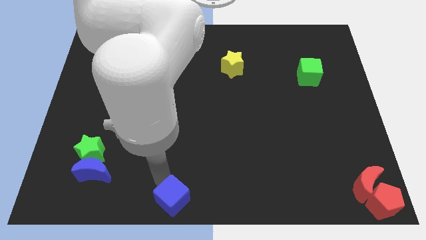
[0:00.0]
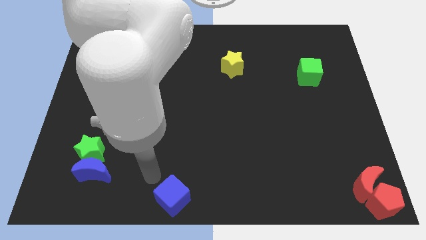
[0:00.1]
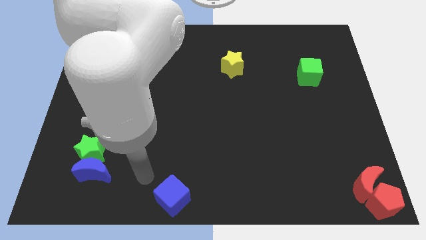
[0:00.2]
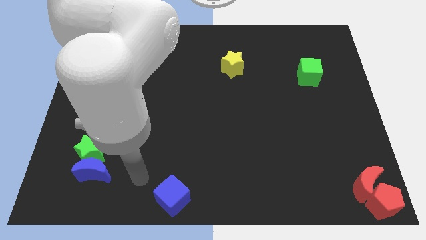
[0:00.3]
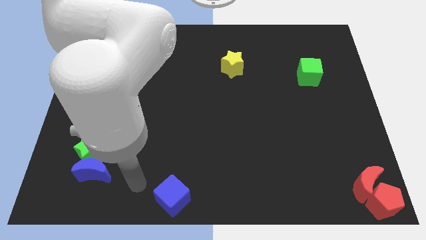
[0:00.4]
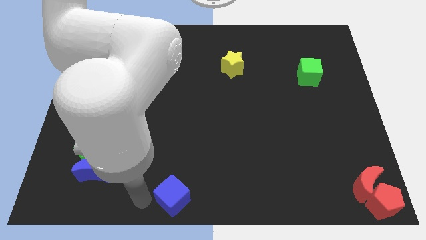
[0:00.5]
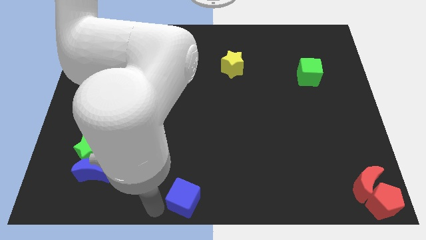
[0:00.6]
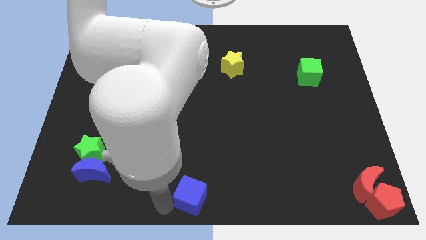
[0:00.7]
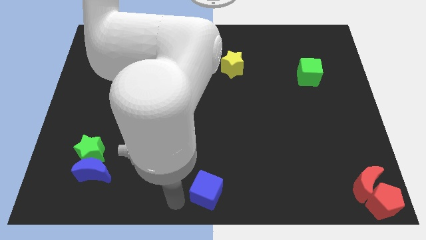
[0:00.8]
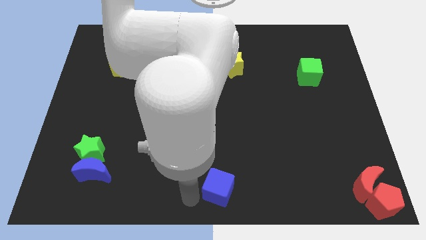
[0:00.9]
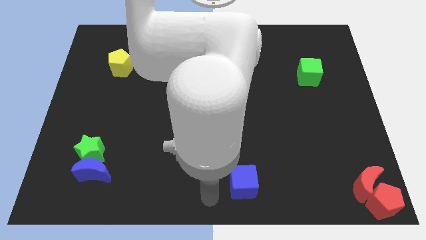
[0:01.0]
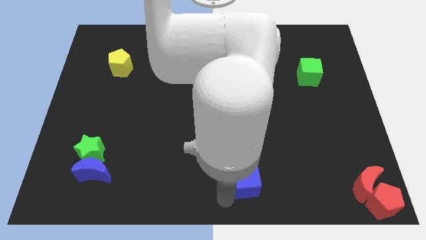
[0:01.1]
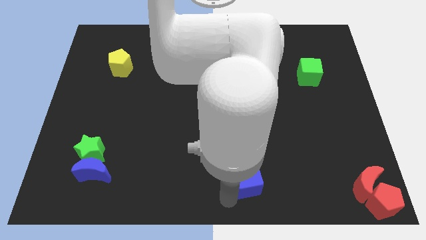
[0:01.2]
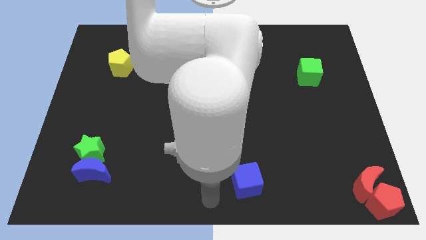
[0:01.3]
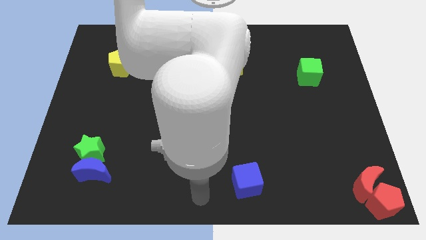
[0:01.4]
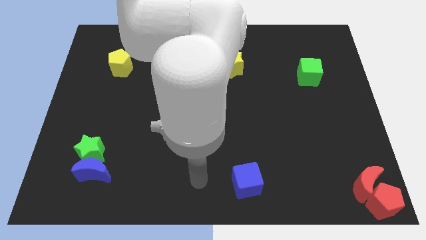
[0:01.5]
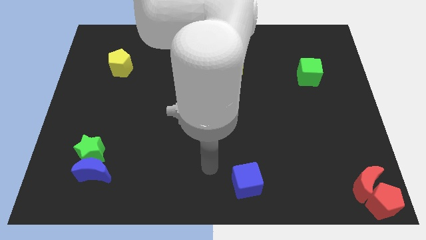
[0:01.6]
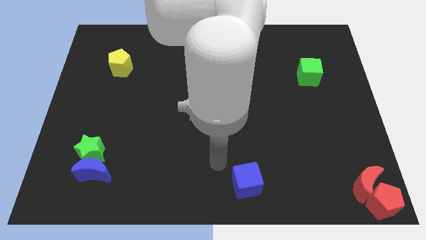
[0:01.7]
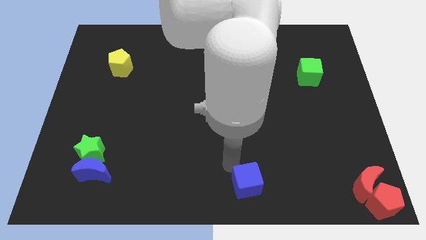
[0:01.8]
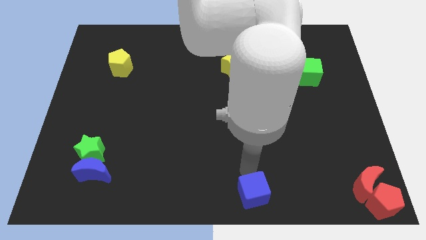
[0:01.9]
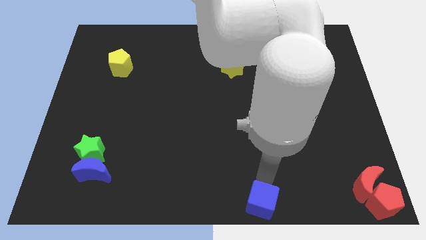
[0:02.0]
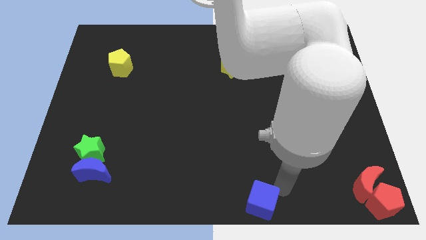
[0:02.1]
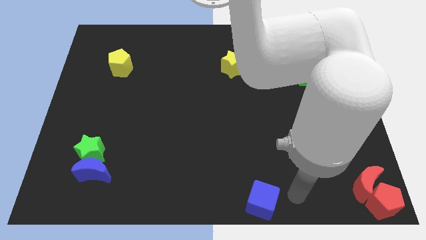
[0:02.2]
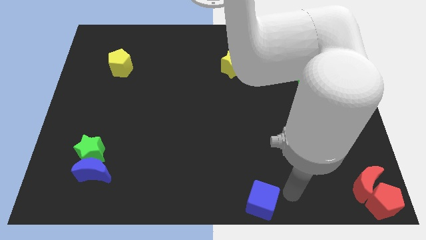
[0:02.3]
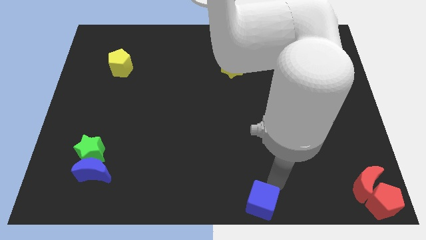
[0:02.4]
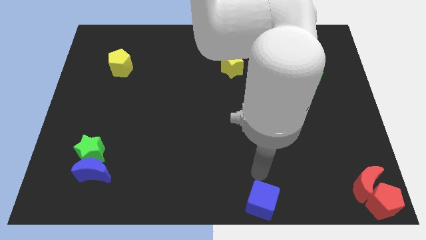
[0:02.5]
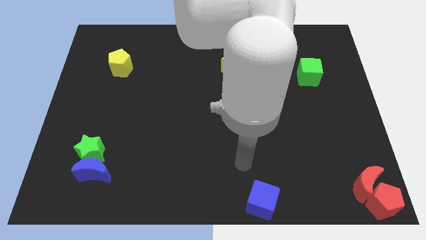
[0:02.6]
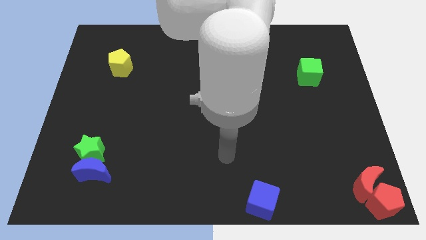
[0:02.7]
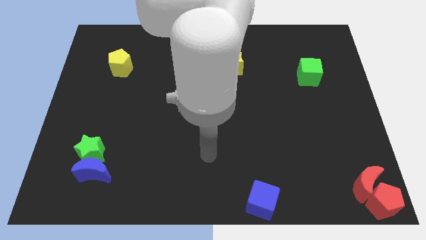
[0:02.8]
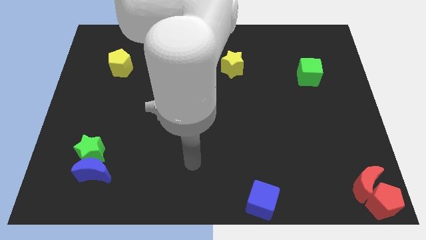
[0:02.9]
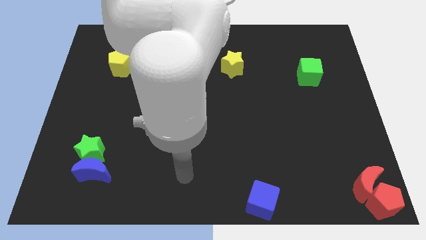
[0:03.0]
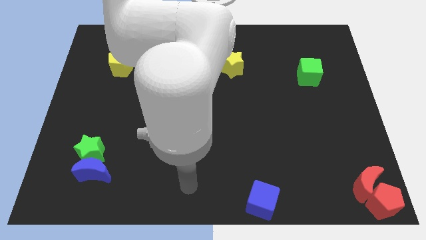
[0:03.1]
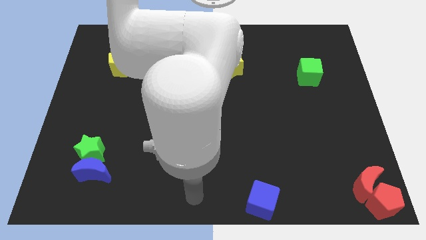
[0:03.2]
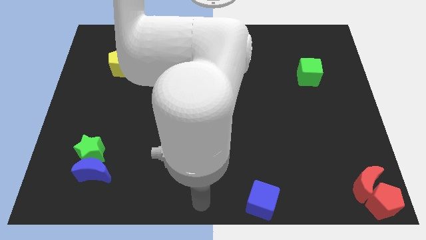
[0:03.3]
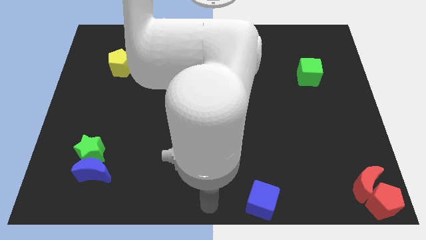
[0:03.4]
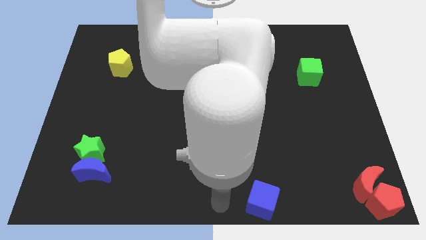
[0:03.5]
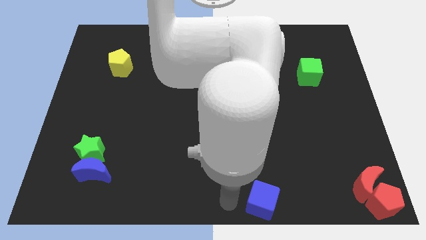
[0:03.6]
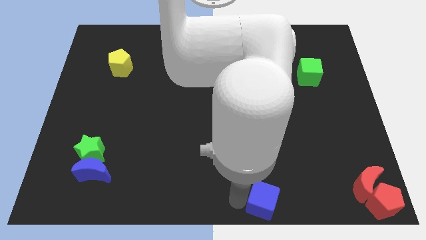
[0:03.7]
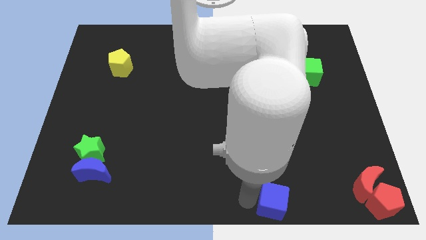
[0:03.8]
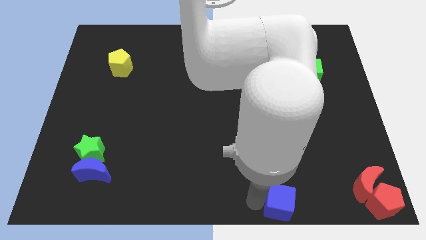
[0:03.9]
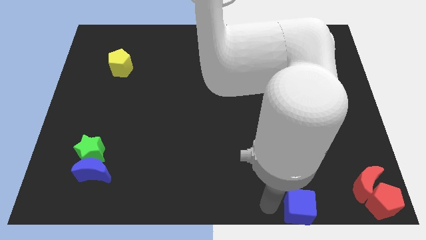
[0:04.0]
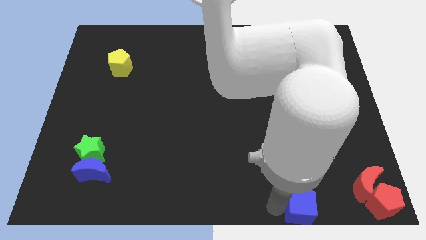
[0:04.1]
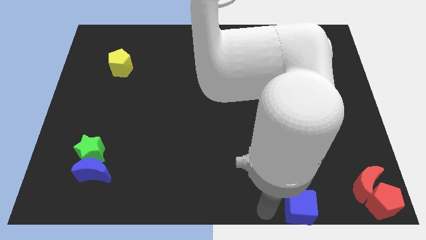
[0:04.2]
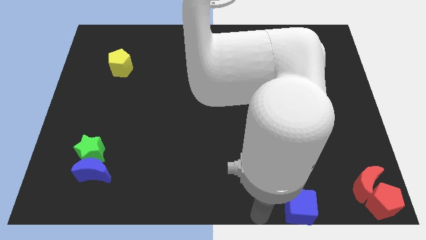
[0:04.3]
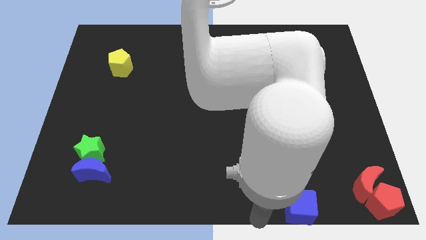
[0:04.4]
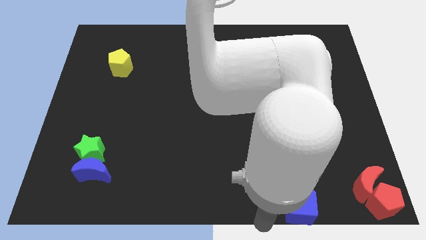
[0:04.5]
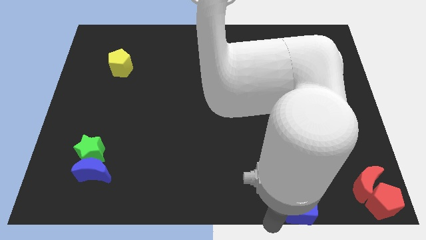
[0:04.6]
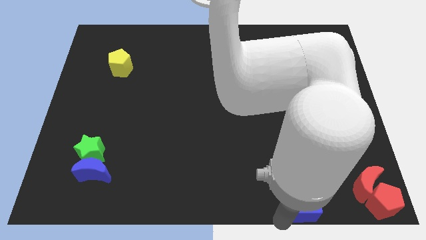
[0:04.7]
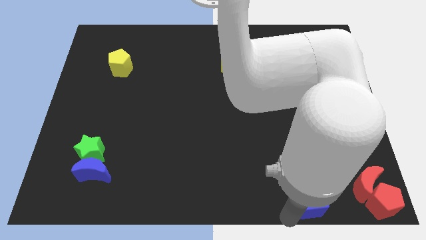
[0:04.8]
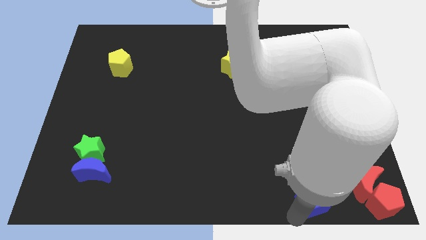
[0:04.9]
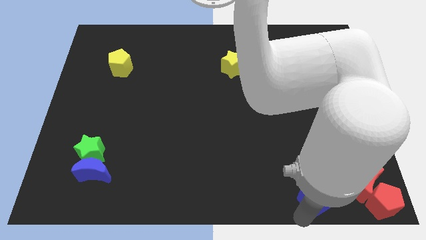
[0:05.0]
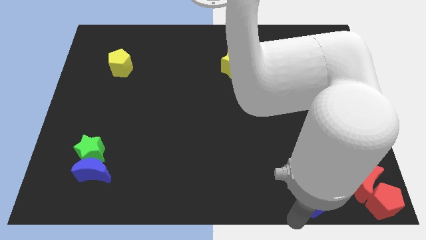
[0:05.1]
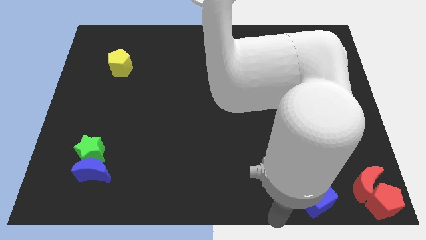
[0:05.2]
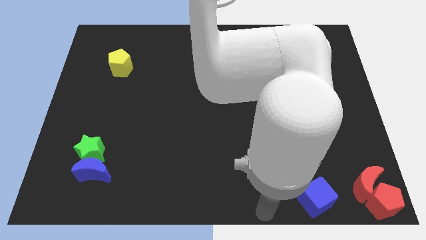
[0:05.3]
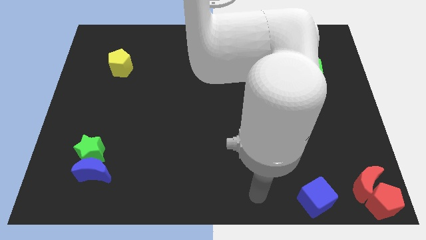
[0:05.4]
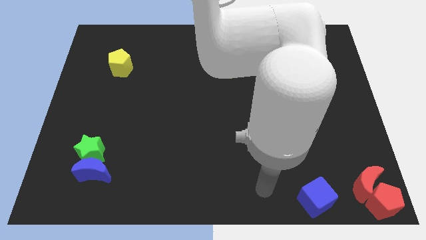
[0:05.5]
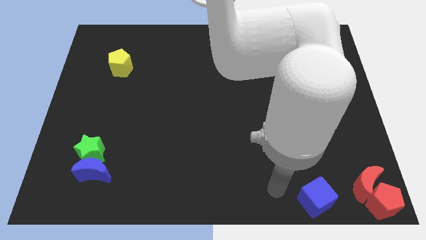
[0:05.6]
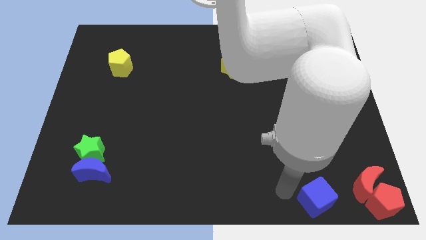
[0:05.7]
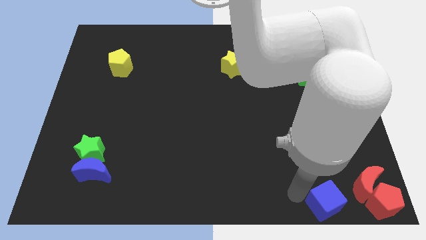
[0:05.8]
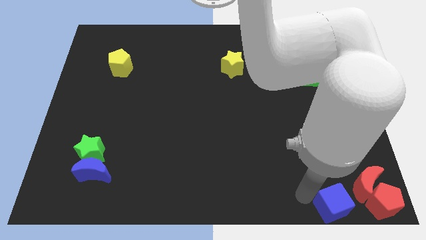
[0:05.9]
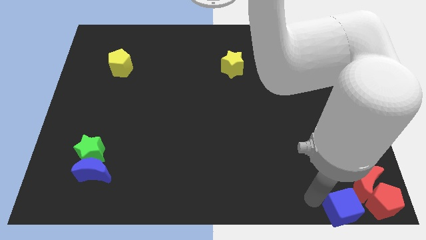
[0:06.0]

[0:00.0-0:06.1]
push blue cube towards the red blocks

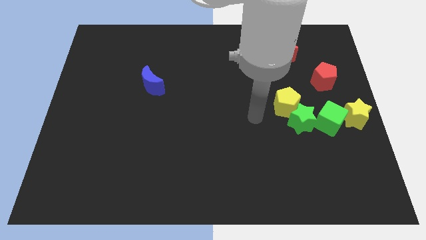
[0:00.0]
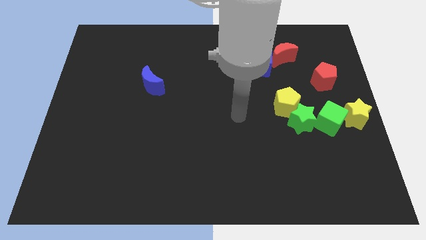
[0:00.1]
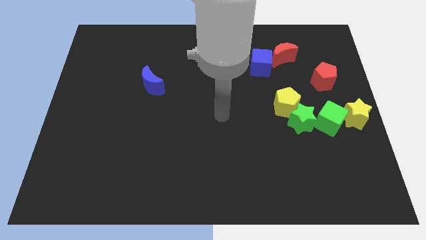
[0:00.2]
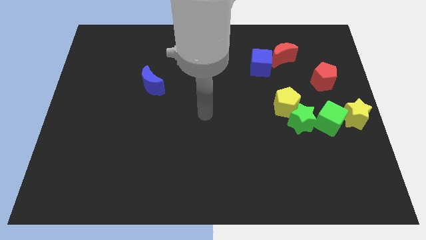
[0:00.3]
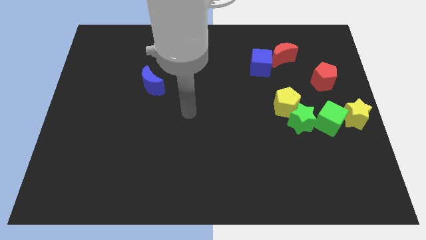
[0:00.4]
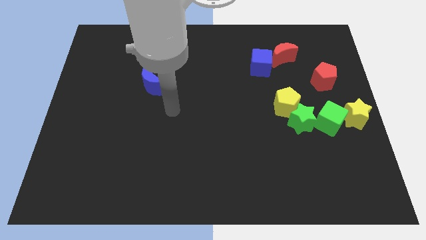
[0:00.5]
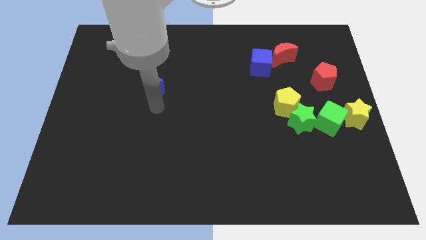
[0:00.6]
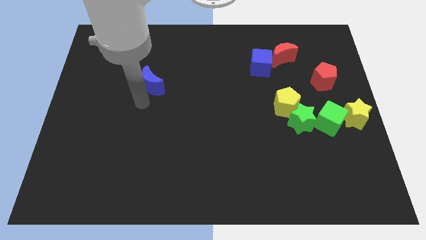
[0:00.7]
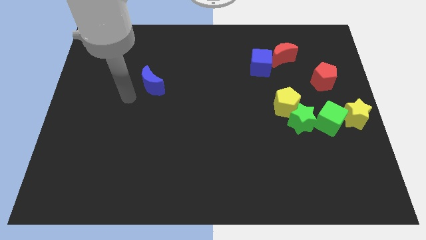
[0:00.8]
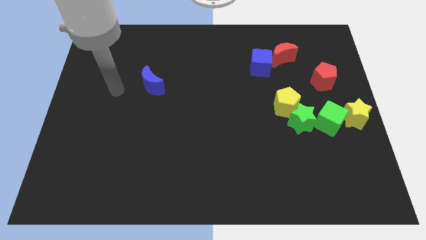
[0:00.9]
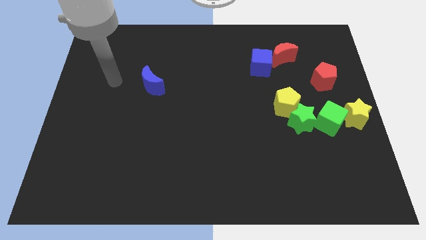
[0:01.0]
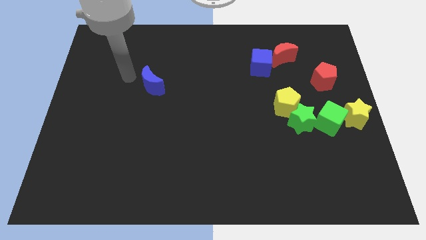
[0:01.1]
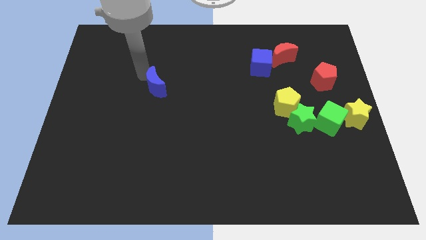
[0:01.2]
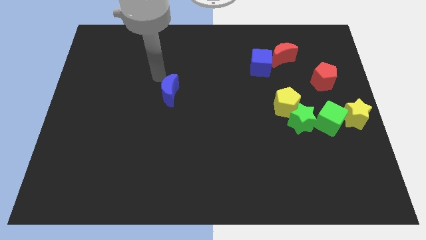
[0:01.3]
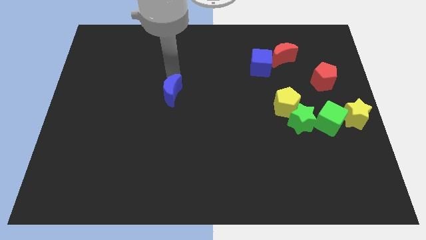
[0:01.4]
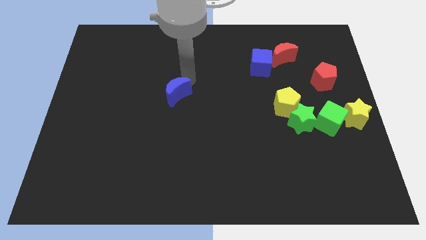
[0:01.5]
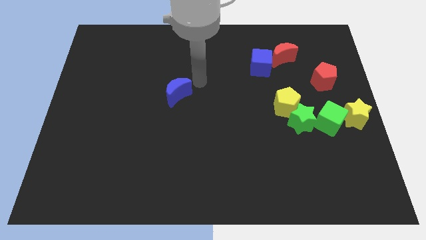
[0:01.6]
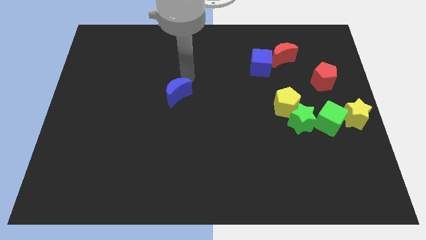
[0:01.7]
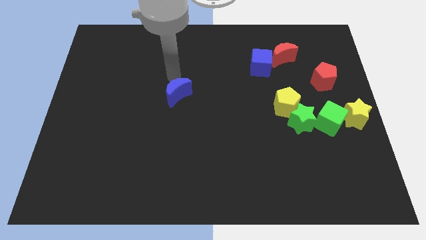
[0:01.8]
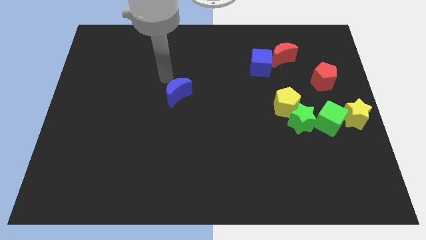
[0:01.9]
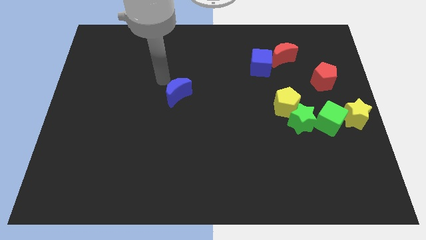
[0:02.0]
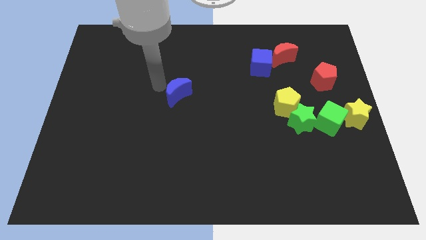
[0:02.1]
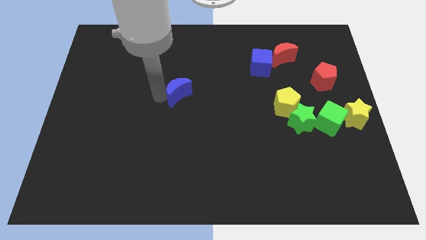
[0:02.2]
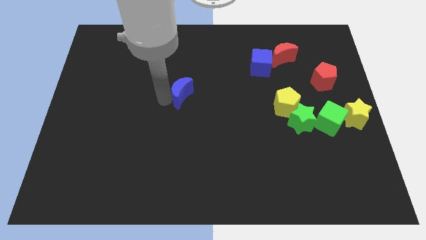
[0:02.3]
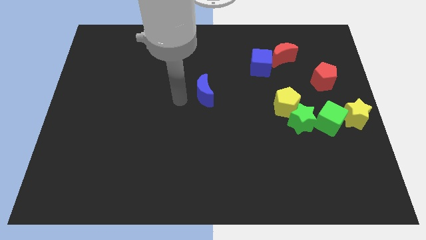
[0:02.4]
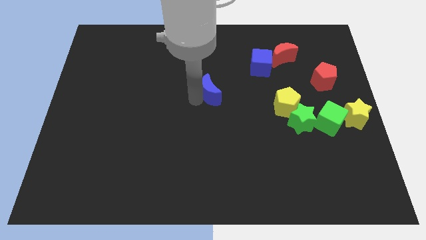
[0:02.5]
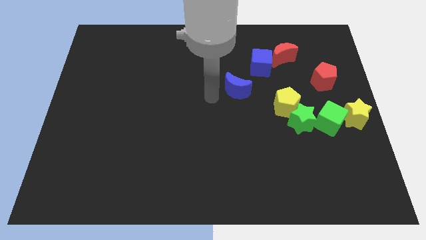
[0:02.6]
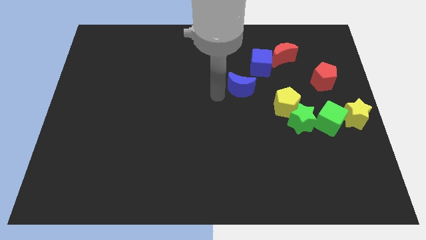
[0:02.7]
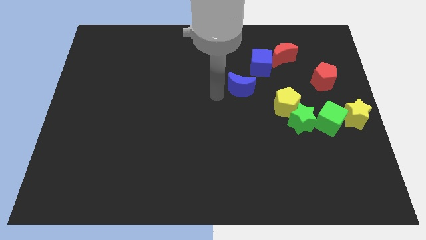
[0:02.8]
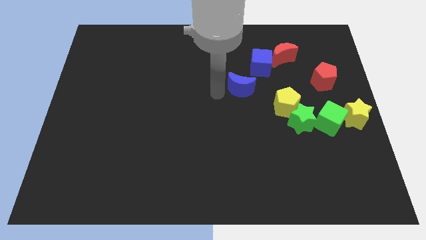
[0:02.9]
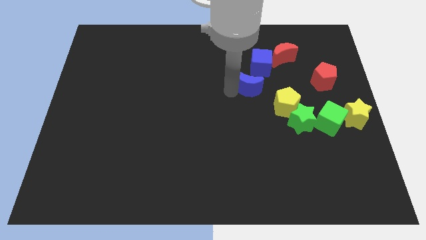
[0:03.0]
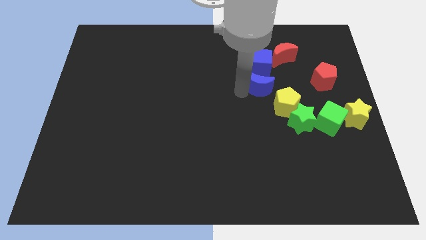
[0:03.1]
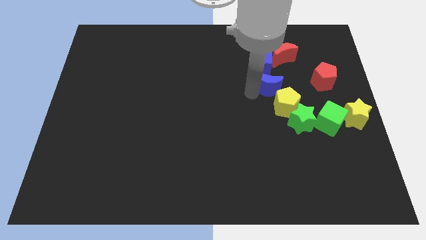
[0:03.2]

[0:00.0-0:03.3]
move the blue crescent below the blue cube
